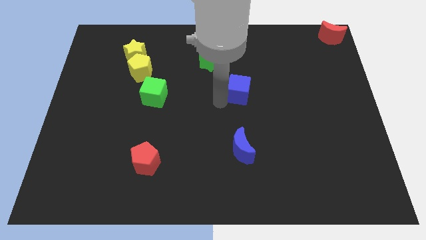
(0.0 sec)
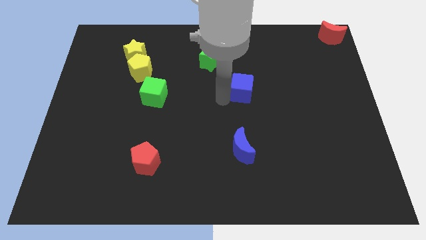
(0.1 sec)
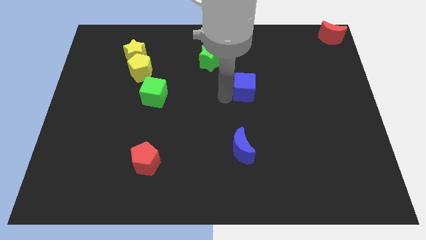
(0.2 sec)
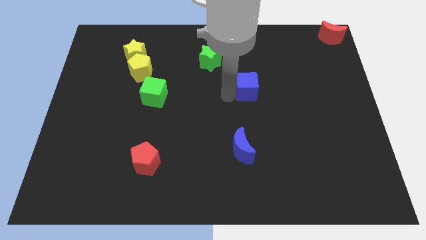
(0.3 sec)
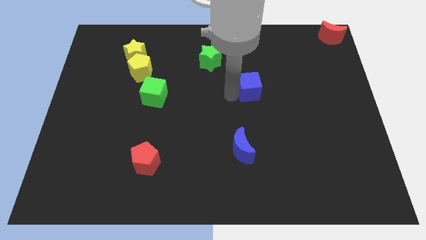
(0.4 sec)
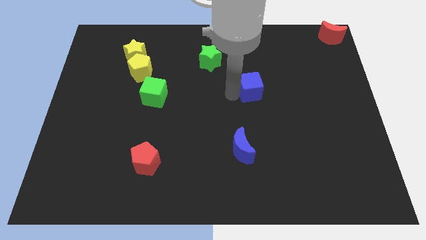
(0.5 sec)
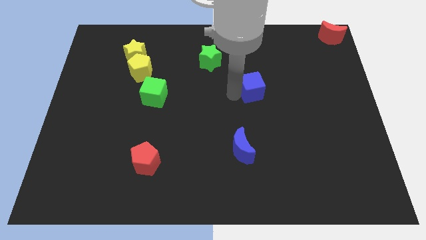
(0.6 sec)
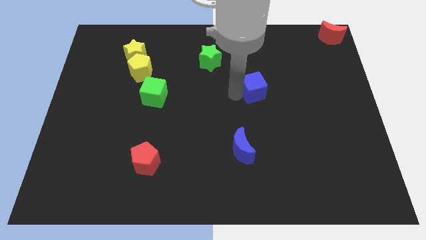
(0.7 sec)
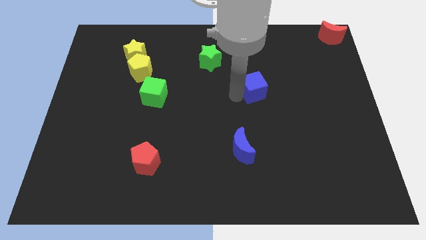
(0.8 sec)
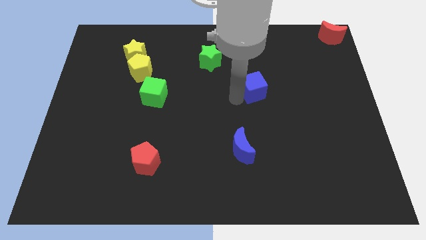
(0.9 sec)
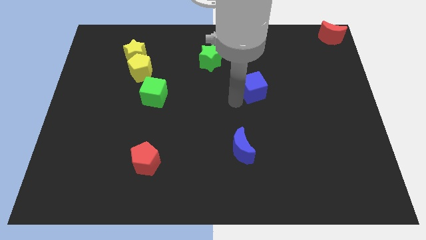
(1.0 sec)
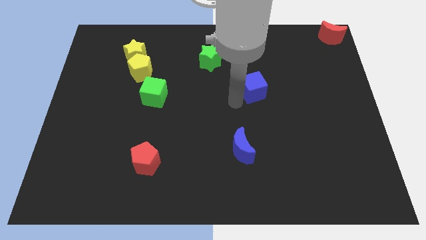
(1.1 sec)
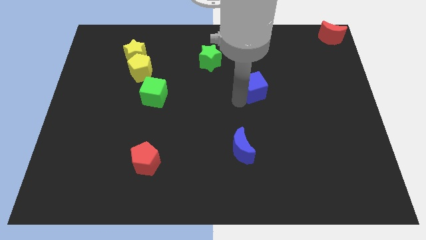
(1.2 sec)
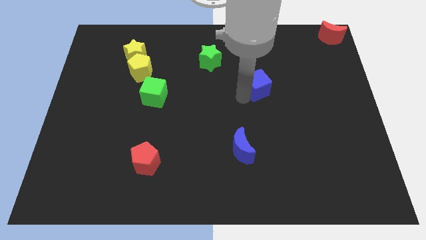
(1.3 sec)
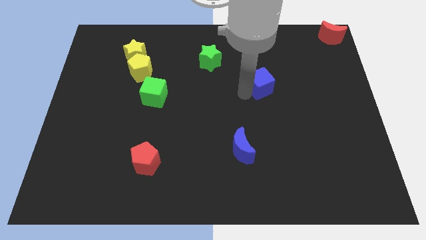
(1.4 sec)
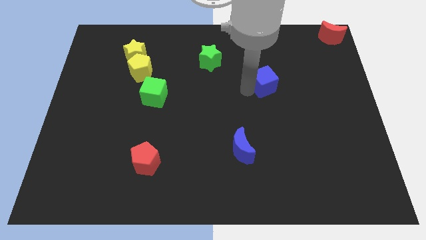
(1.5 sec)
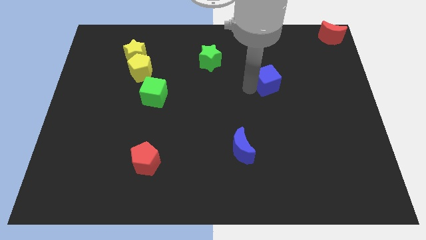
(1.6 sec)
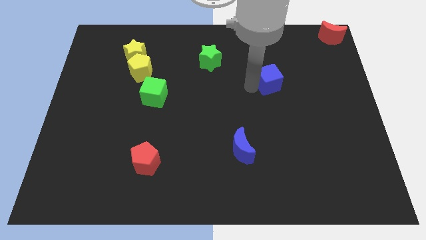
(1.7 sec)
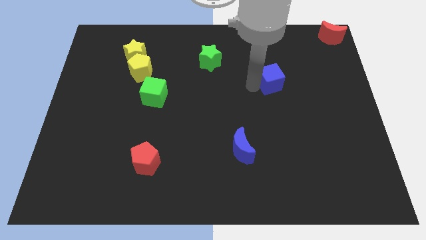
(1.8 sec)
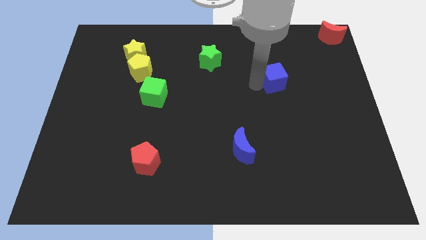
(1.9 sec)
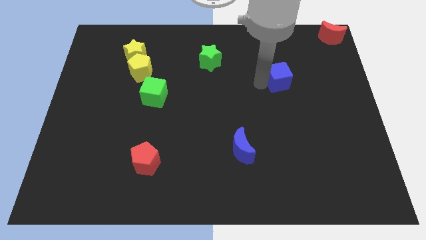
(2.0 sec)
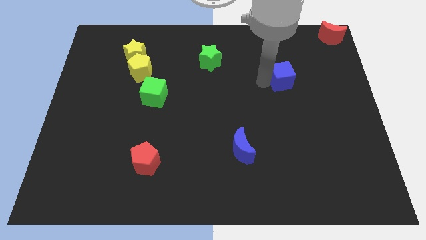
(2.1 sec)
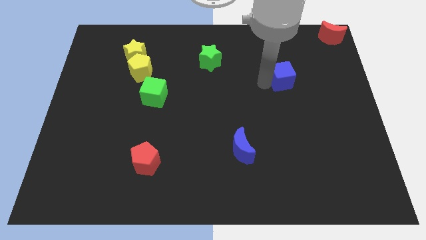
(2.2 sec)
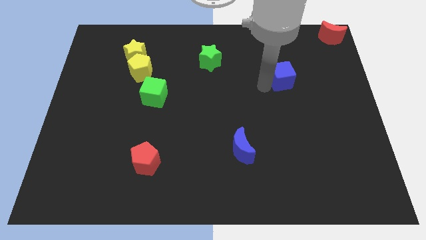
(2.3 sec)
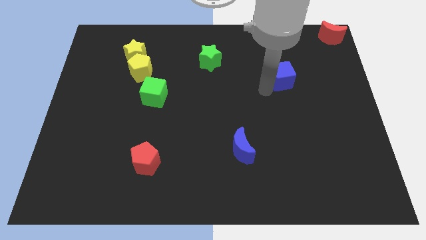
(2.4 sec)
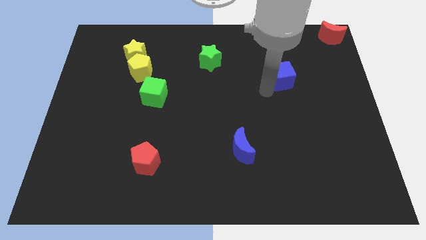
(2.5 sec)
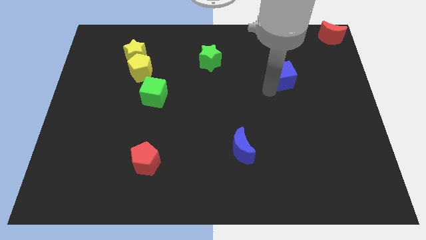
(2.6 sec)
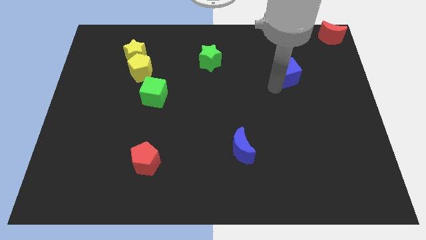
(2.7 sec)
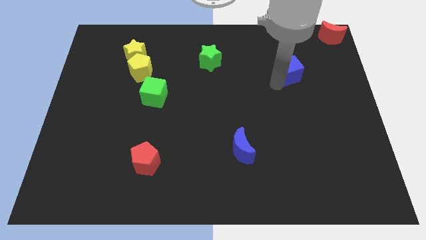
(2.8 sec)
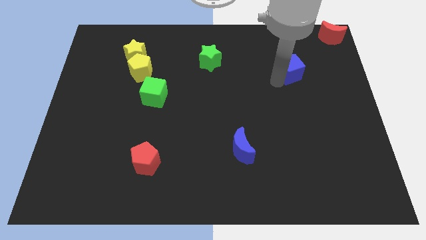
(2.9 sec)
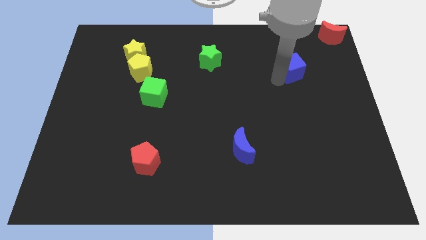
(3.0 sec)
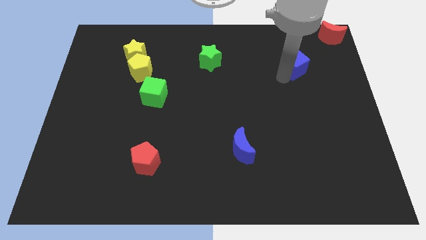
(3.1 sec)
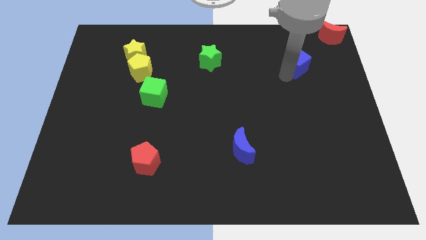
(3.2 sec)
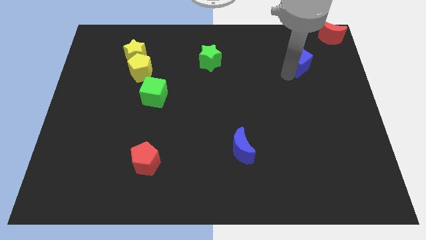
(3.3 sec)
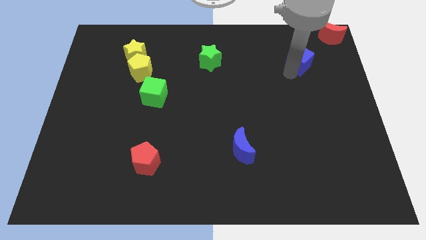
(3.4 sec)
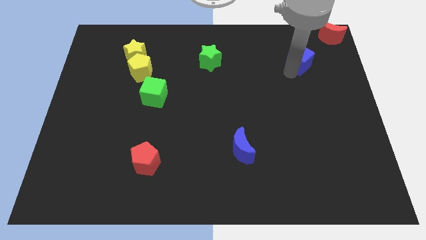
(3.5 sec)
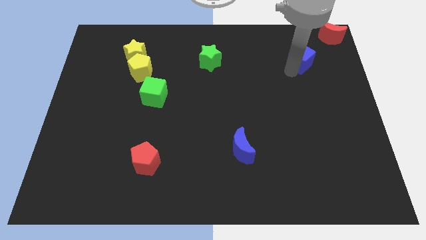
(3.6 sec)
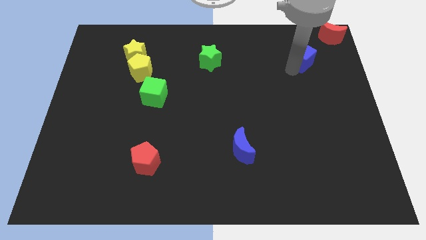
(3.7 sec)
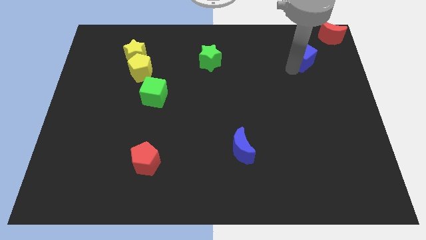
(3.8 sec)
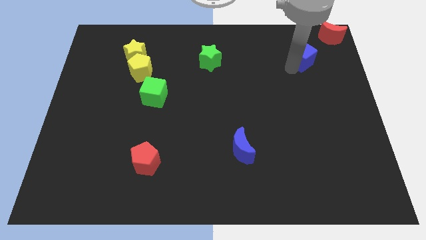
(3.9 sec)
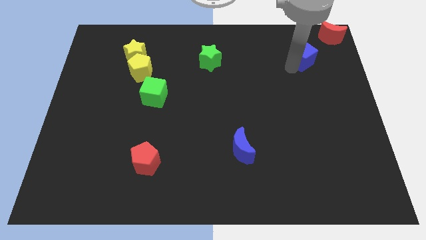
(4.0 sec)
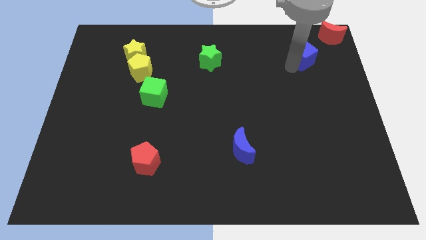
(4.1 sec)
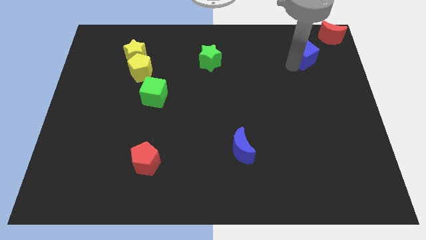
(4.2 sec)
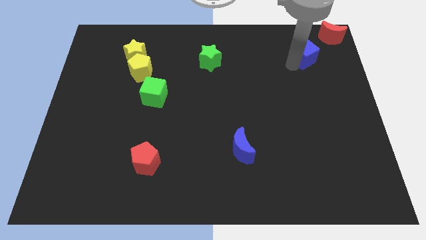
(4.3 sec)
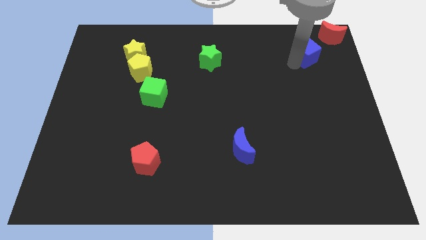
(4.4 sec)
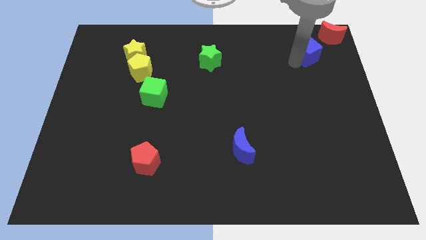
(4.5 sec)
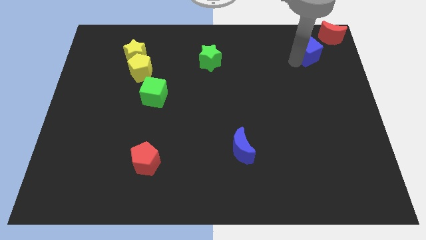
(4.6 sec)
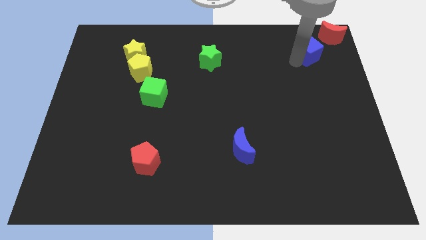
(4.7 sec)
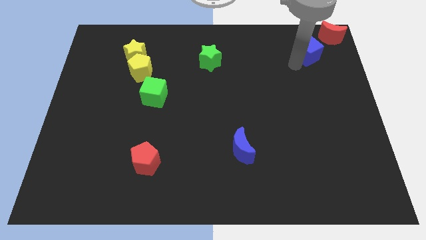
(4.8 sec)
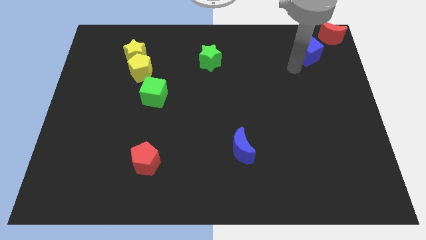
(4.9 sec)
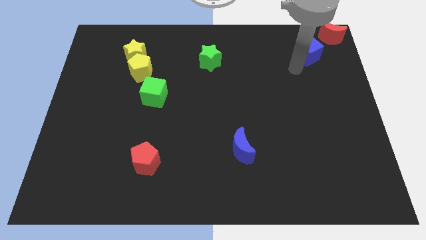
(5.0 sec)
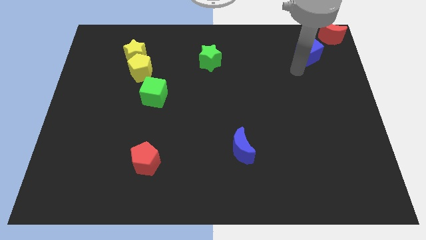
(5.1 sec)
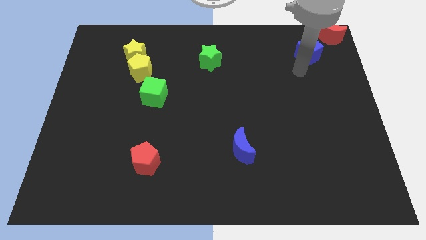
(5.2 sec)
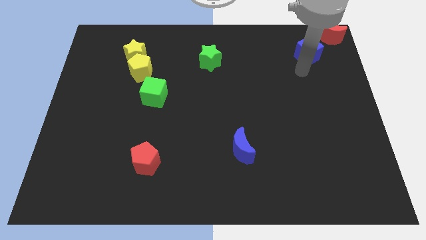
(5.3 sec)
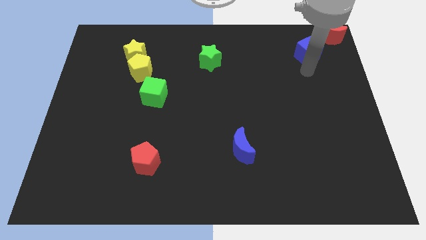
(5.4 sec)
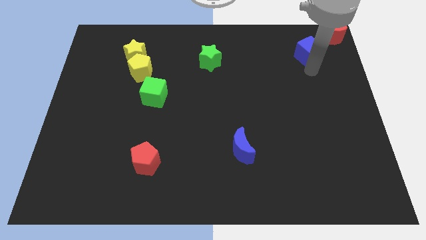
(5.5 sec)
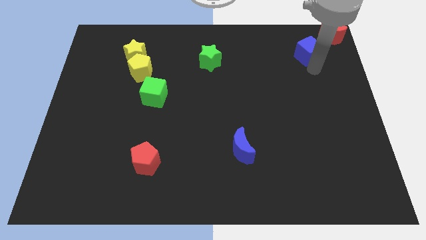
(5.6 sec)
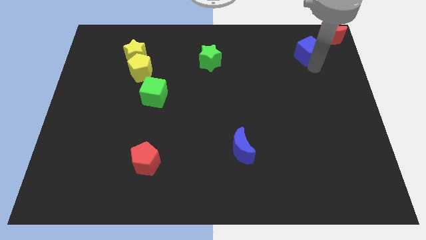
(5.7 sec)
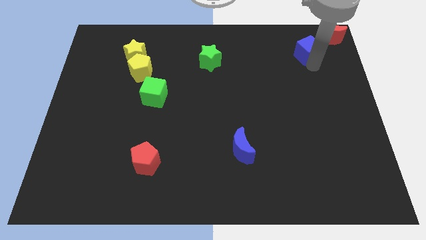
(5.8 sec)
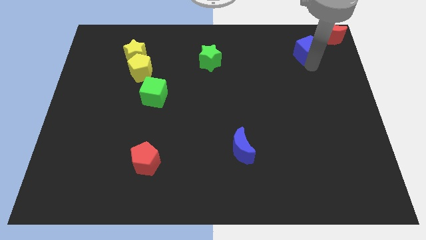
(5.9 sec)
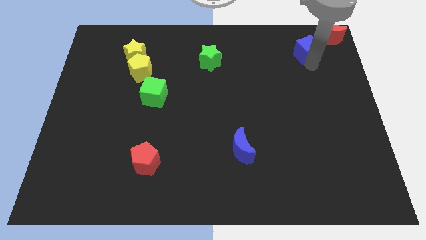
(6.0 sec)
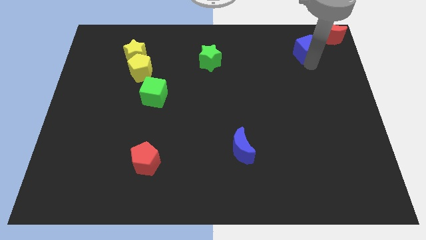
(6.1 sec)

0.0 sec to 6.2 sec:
move the blue cube towards the bottom left of the red crescent

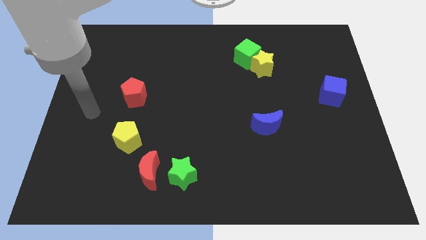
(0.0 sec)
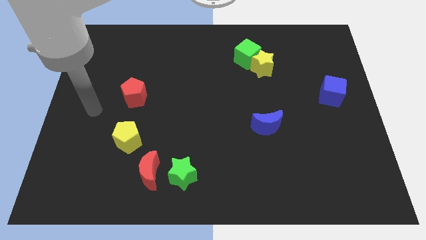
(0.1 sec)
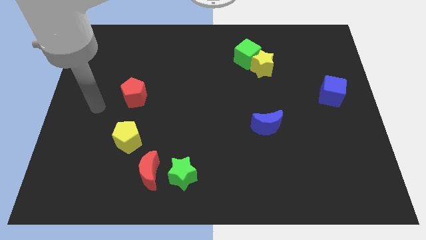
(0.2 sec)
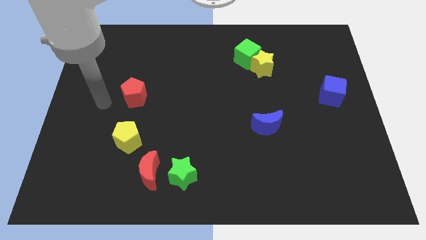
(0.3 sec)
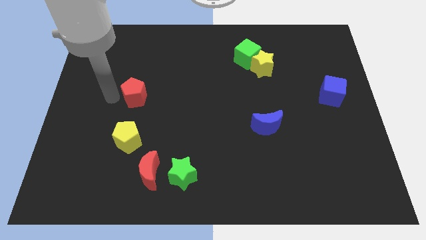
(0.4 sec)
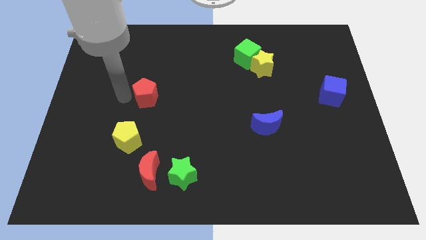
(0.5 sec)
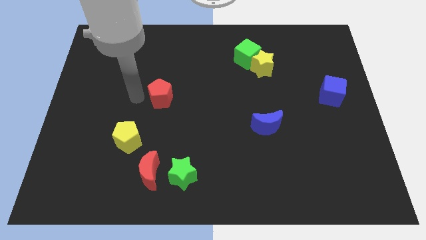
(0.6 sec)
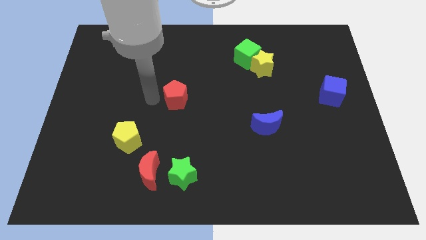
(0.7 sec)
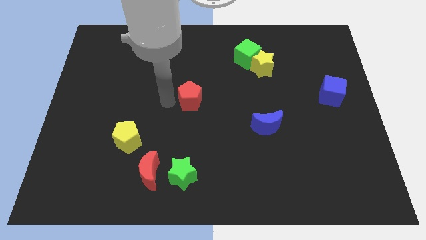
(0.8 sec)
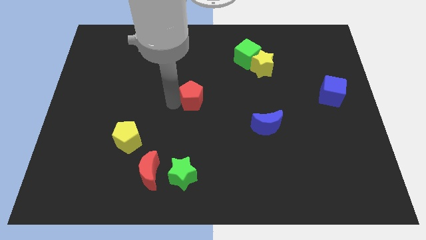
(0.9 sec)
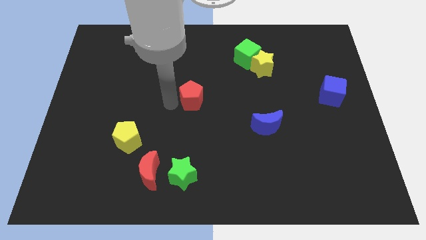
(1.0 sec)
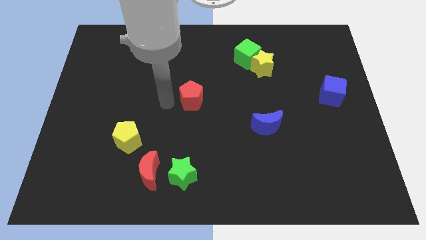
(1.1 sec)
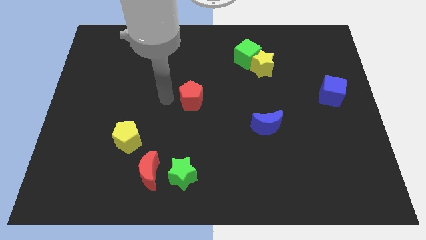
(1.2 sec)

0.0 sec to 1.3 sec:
slide the red pentagon to the right

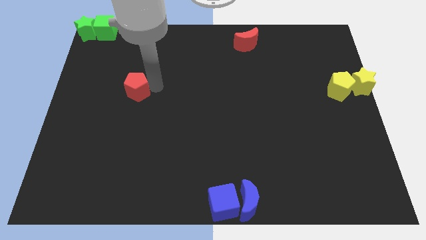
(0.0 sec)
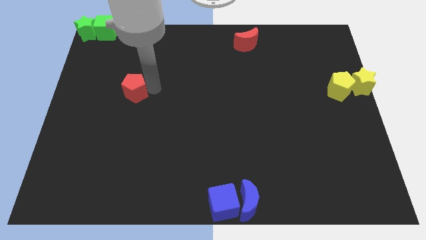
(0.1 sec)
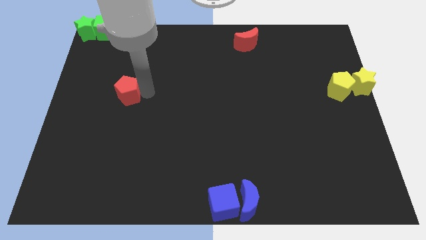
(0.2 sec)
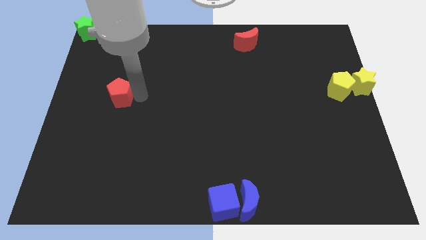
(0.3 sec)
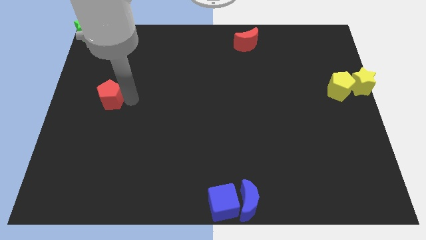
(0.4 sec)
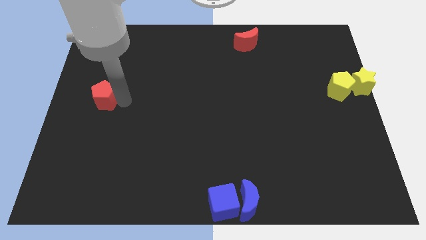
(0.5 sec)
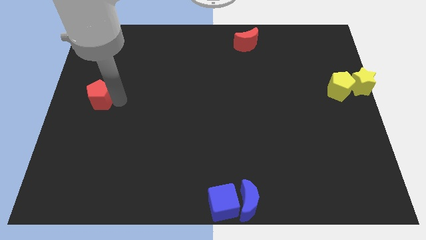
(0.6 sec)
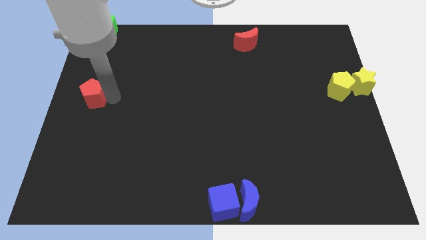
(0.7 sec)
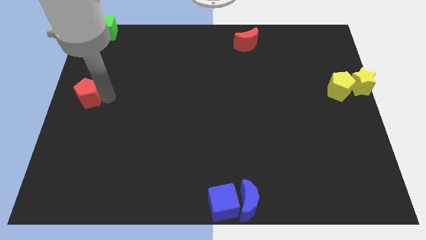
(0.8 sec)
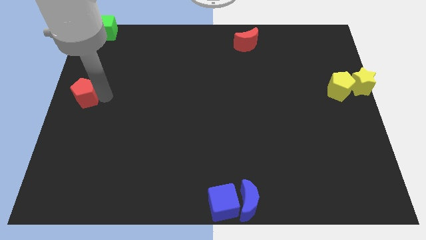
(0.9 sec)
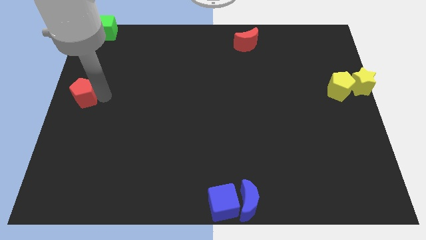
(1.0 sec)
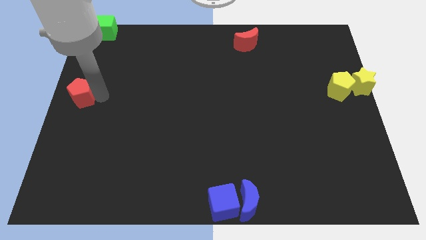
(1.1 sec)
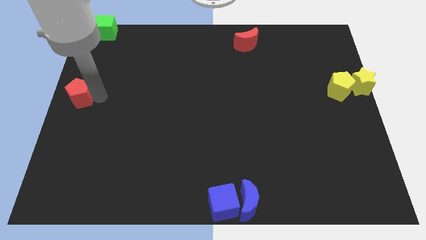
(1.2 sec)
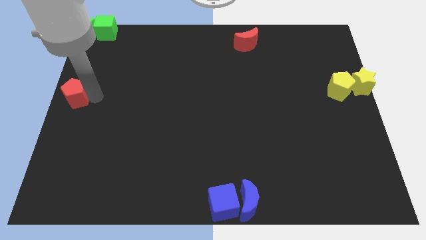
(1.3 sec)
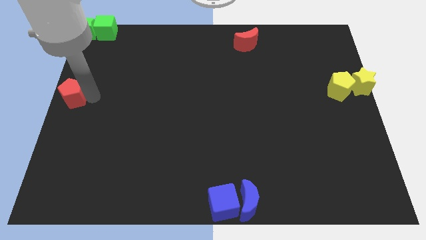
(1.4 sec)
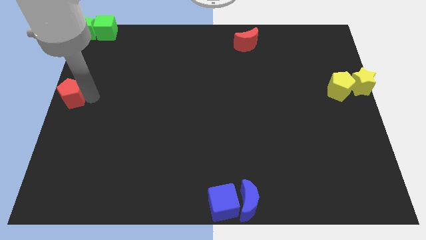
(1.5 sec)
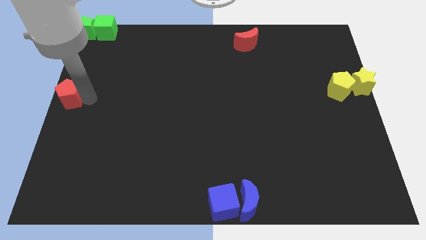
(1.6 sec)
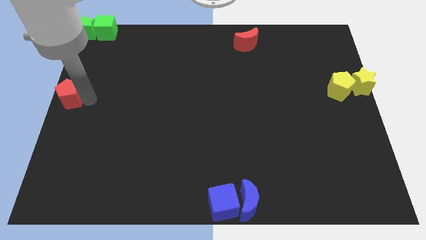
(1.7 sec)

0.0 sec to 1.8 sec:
drag the red pentagon towards the center left
